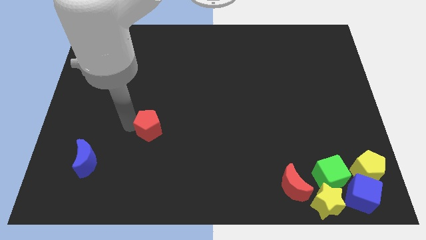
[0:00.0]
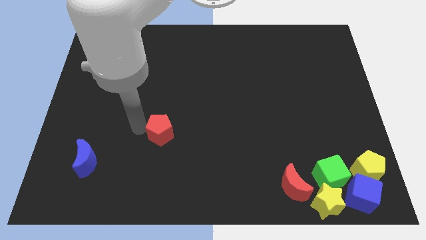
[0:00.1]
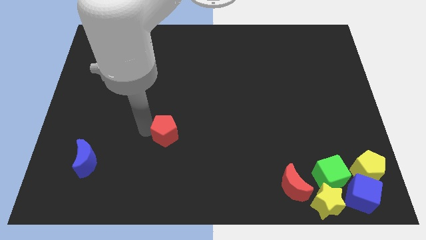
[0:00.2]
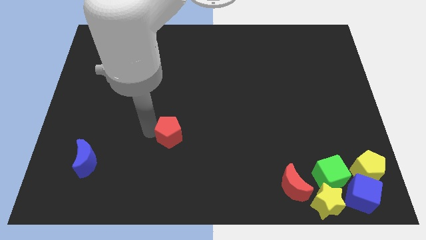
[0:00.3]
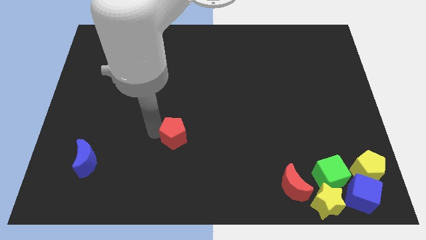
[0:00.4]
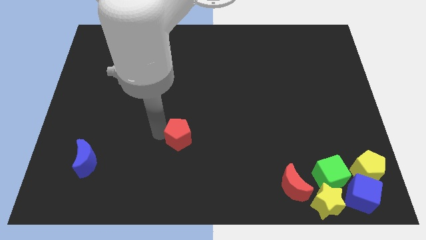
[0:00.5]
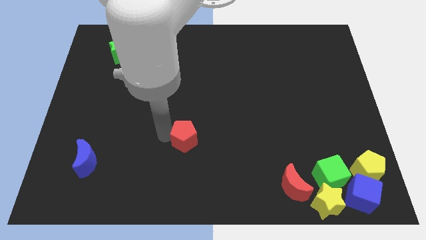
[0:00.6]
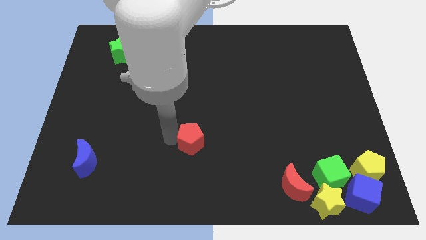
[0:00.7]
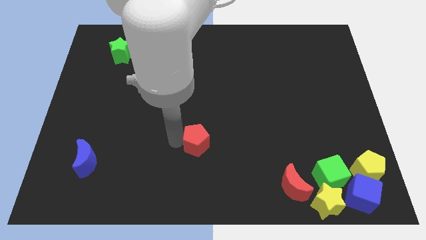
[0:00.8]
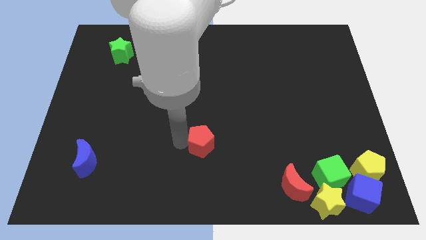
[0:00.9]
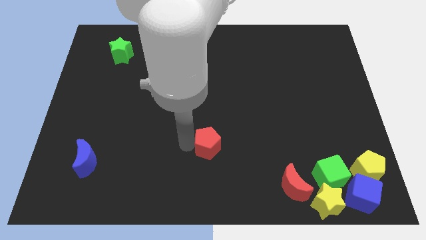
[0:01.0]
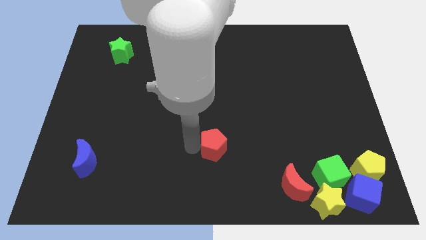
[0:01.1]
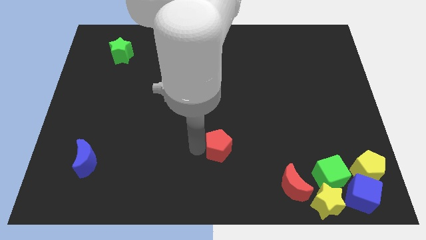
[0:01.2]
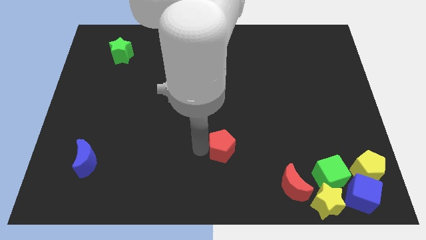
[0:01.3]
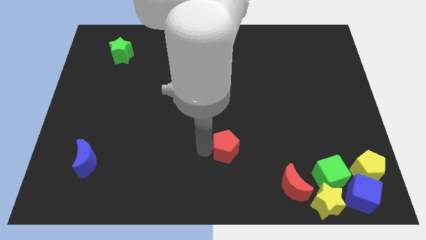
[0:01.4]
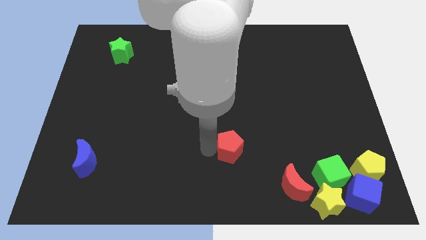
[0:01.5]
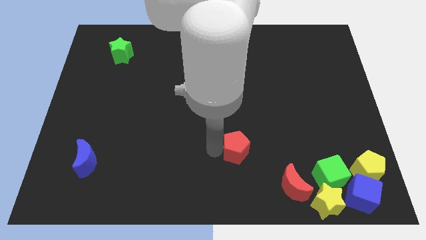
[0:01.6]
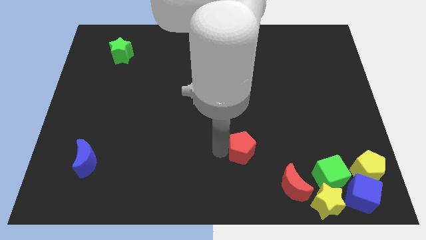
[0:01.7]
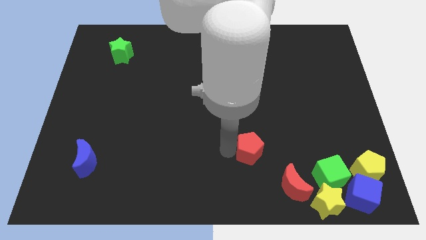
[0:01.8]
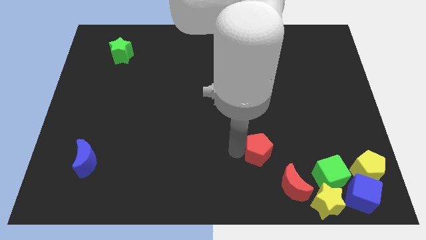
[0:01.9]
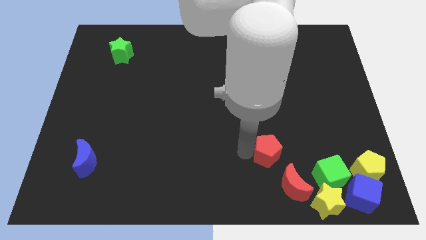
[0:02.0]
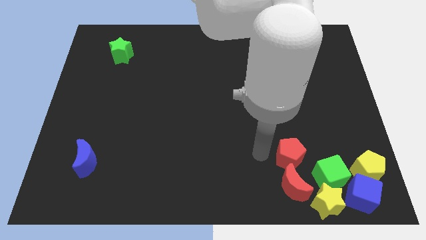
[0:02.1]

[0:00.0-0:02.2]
slide red pentagon towards red moon

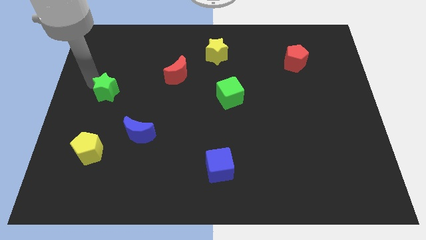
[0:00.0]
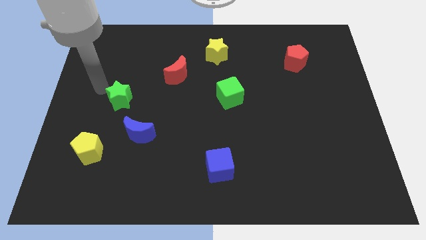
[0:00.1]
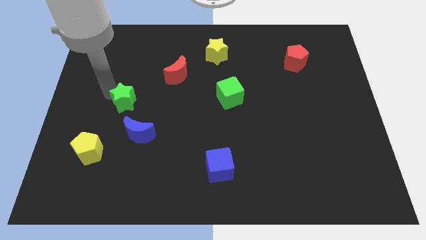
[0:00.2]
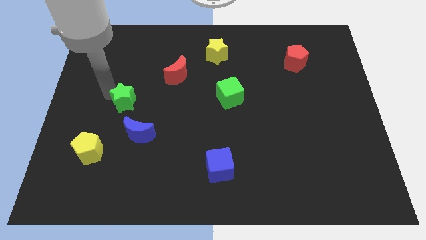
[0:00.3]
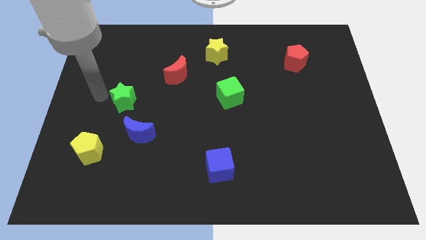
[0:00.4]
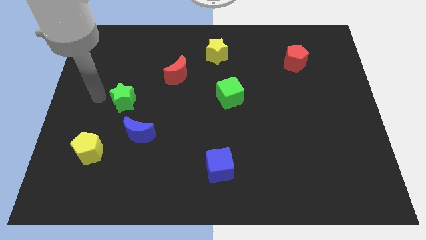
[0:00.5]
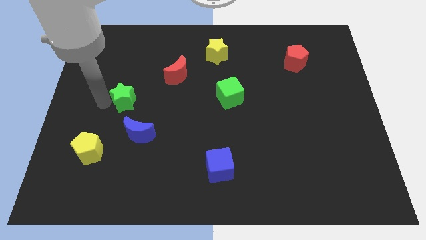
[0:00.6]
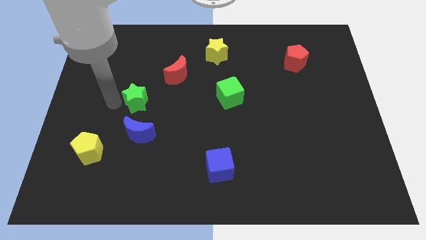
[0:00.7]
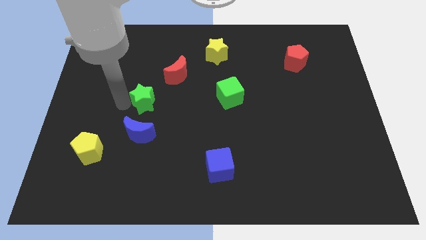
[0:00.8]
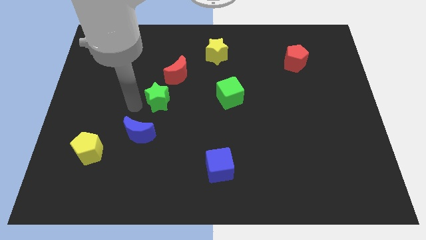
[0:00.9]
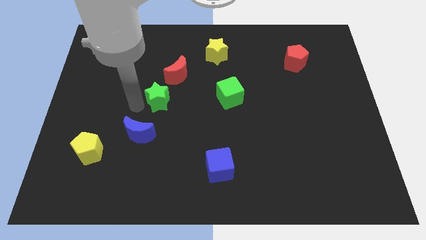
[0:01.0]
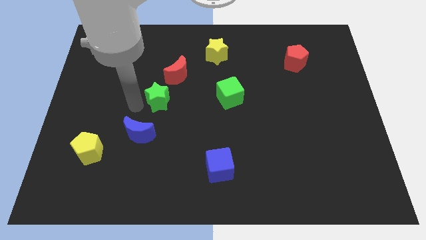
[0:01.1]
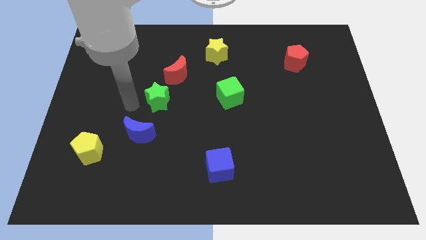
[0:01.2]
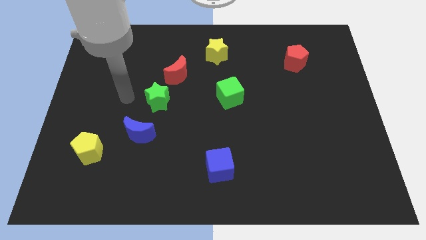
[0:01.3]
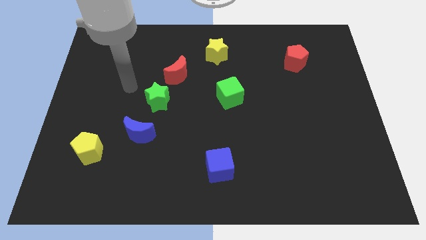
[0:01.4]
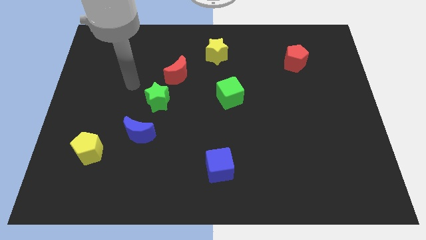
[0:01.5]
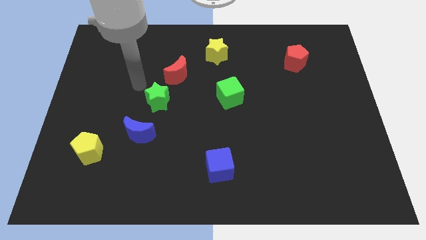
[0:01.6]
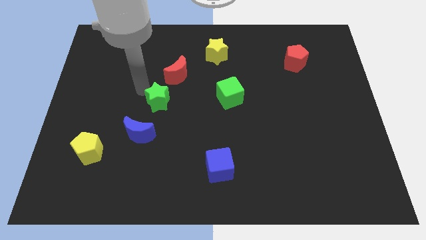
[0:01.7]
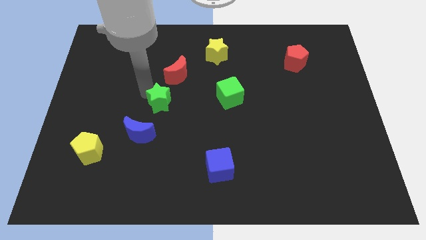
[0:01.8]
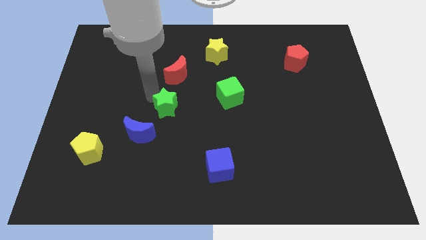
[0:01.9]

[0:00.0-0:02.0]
push the green star to the bottom of the red crescent

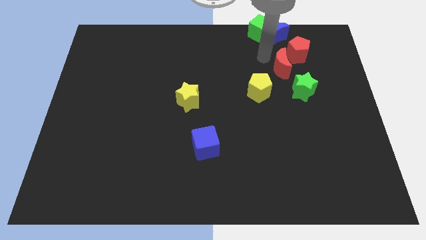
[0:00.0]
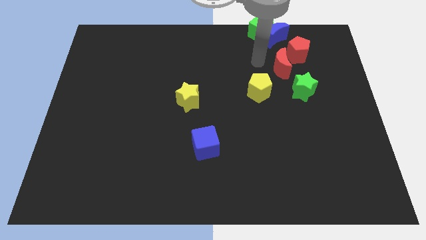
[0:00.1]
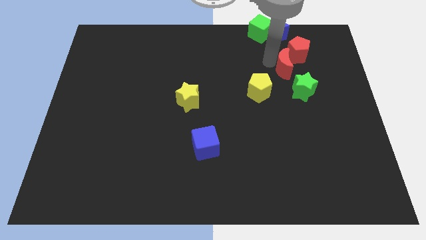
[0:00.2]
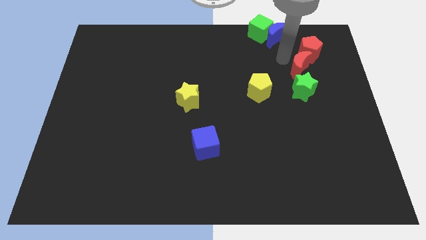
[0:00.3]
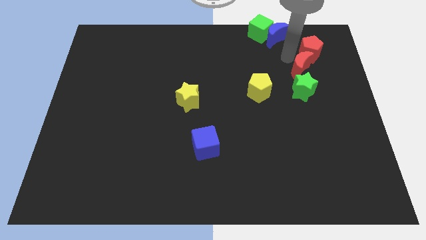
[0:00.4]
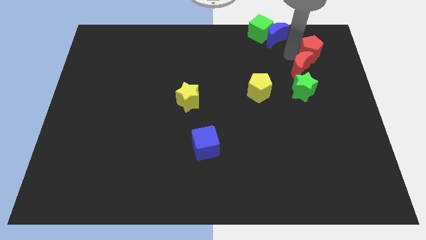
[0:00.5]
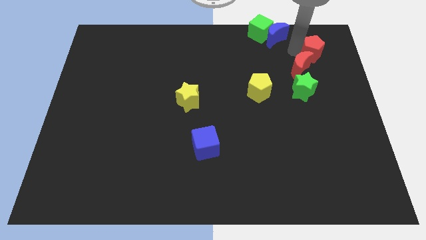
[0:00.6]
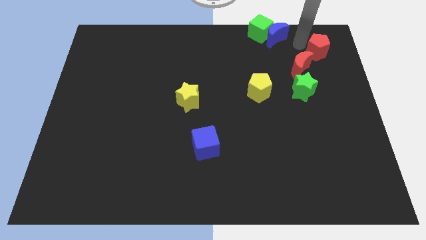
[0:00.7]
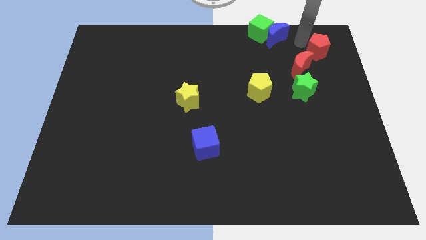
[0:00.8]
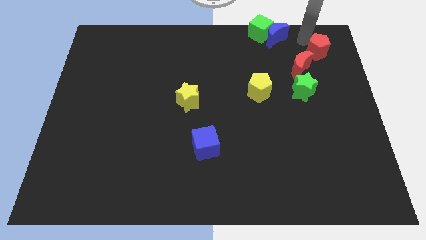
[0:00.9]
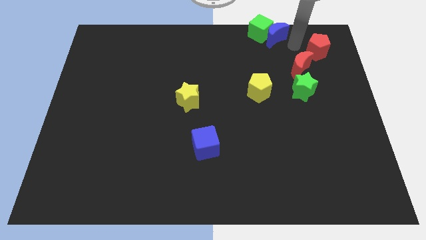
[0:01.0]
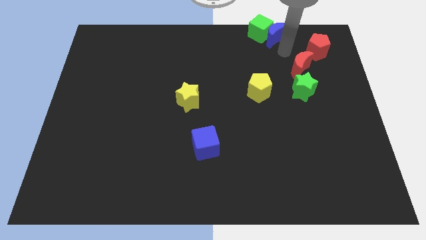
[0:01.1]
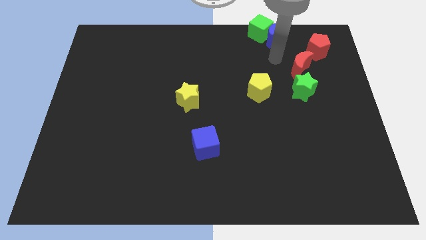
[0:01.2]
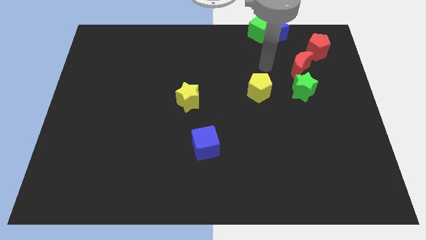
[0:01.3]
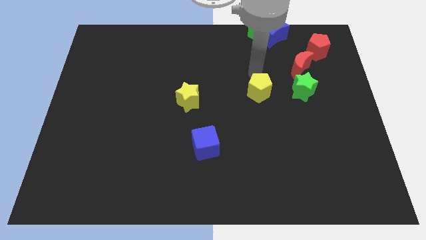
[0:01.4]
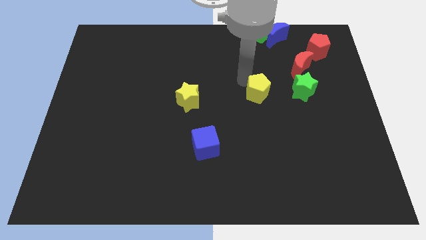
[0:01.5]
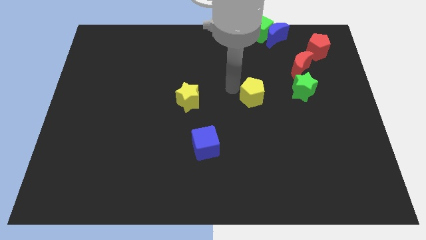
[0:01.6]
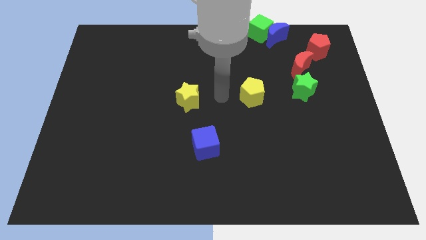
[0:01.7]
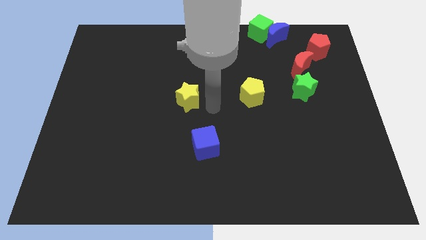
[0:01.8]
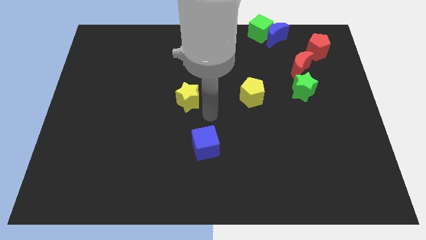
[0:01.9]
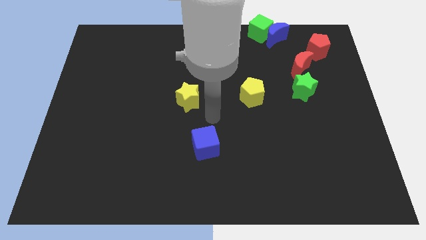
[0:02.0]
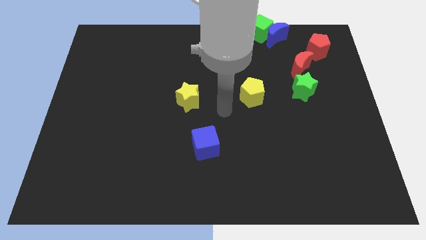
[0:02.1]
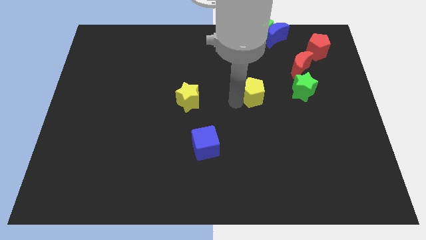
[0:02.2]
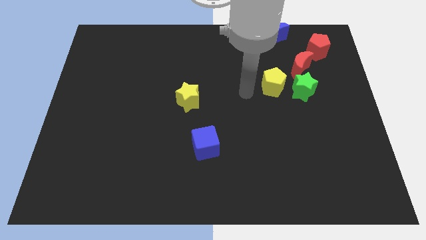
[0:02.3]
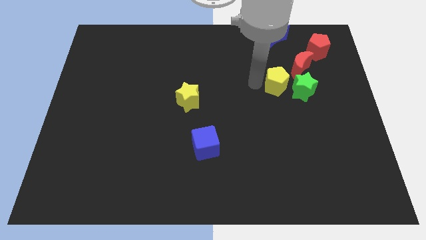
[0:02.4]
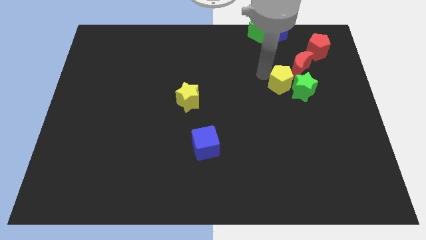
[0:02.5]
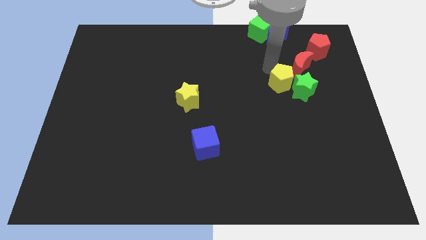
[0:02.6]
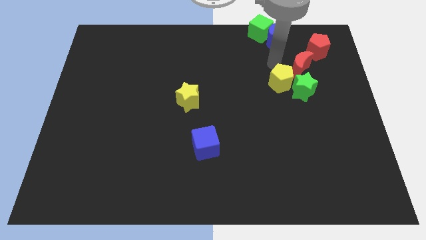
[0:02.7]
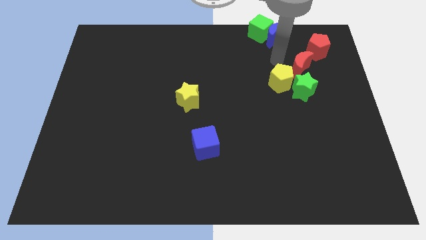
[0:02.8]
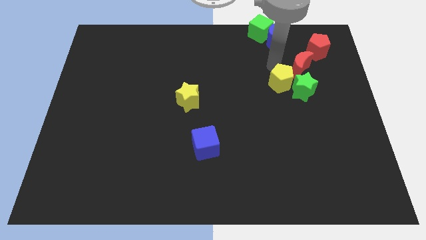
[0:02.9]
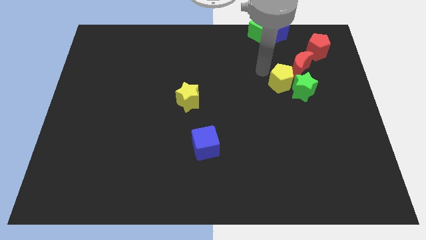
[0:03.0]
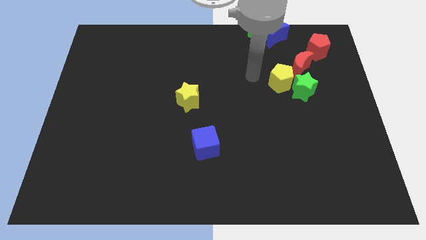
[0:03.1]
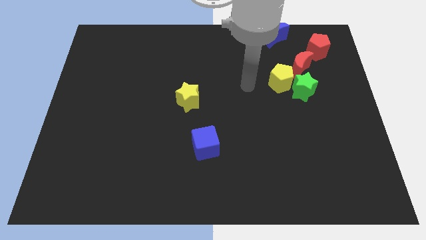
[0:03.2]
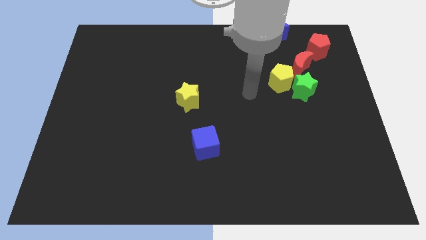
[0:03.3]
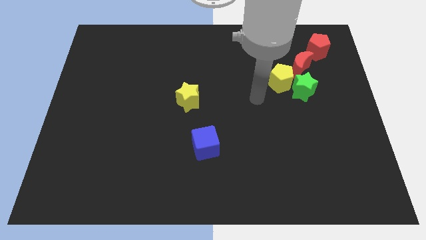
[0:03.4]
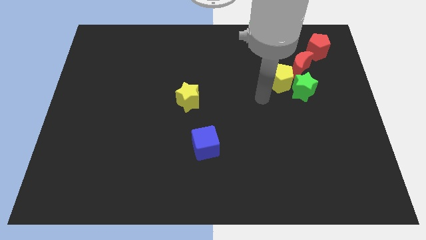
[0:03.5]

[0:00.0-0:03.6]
place the yellow pentagon diagonally to the red moon

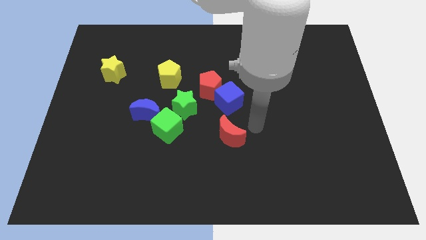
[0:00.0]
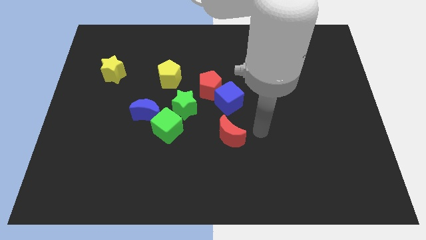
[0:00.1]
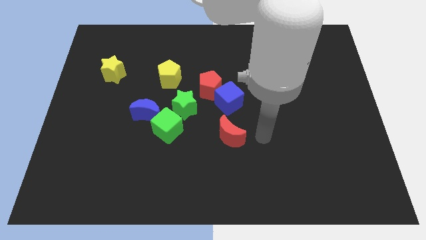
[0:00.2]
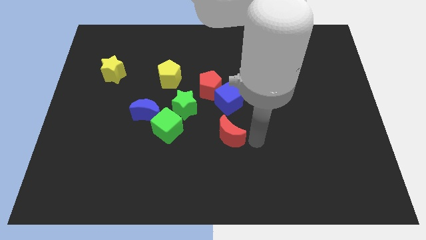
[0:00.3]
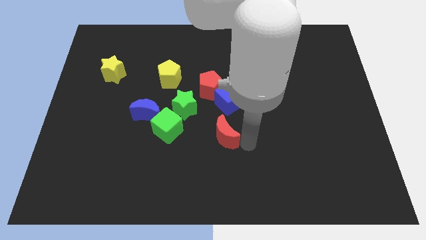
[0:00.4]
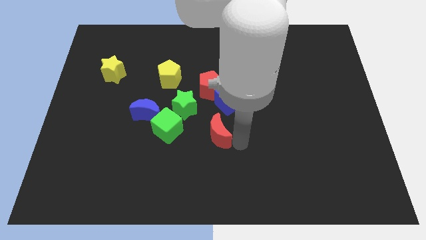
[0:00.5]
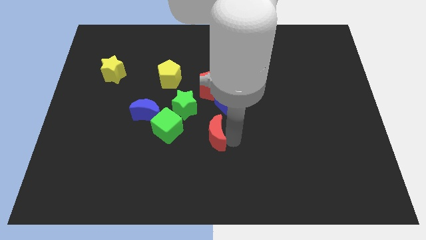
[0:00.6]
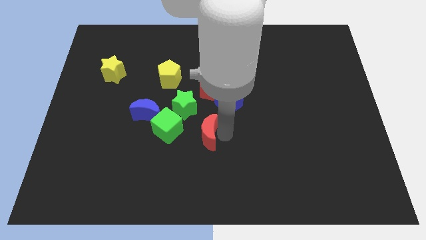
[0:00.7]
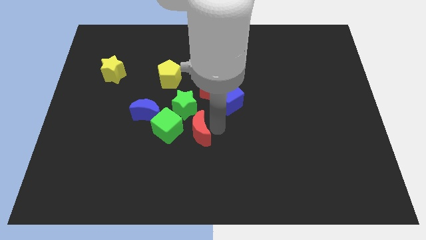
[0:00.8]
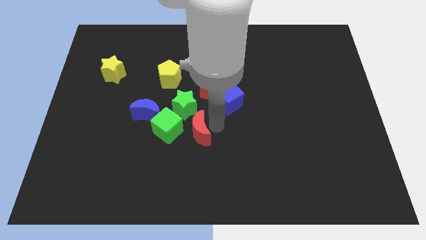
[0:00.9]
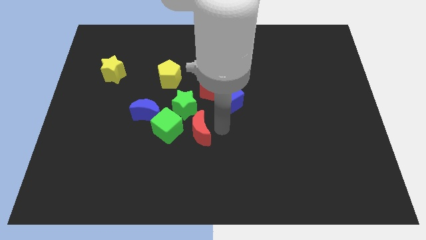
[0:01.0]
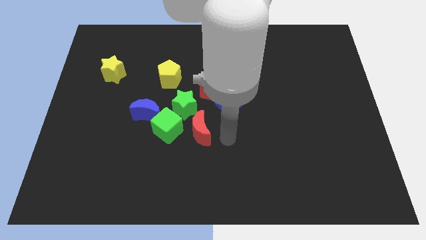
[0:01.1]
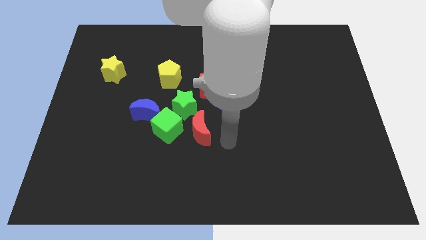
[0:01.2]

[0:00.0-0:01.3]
place the red moon to the right of the green cube
